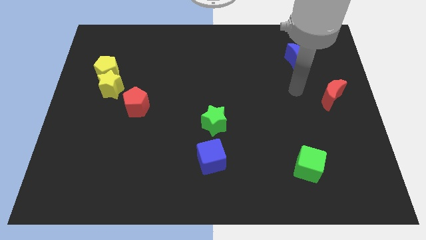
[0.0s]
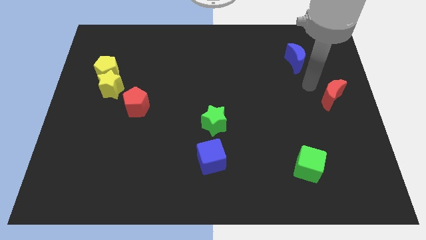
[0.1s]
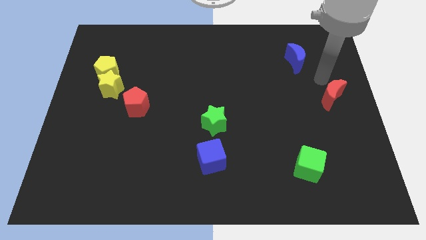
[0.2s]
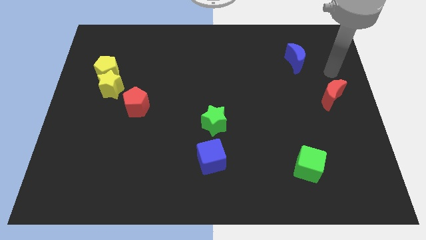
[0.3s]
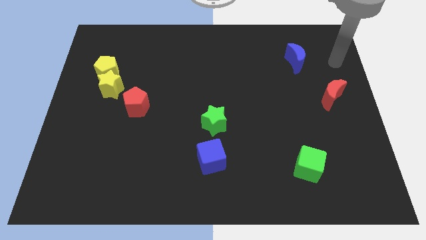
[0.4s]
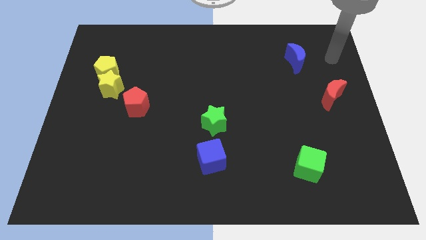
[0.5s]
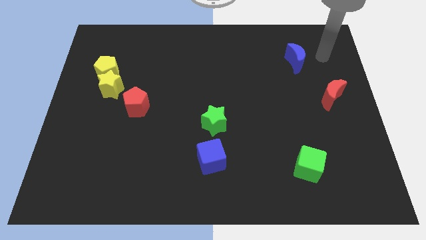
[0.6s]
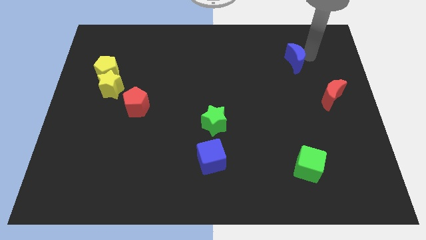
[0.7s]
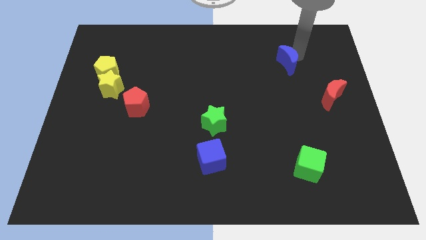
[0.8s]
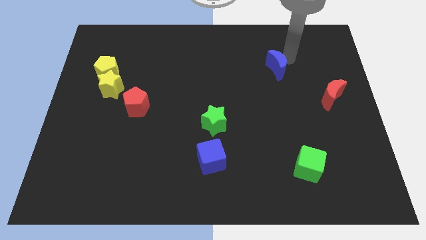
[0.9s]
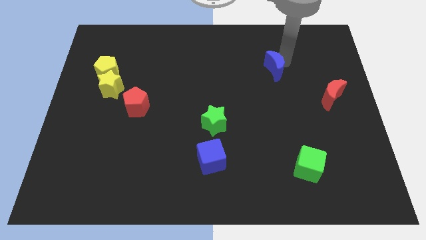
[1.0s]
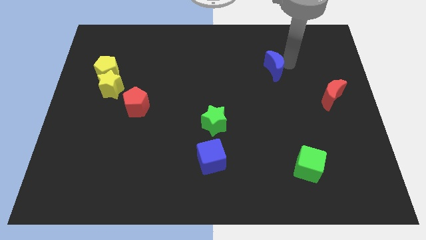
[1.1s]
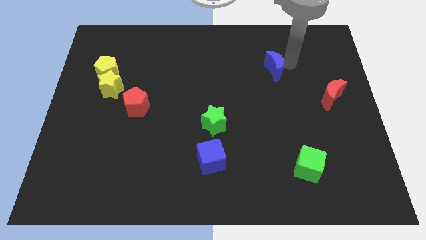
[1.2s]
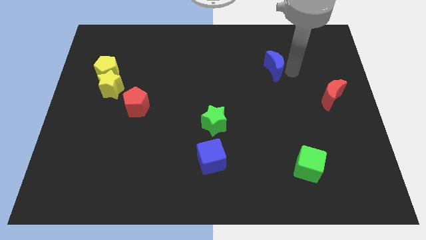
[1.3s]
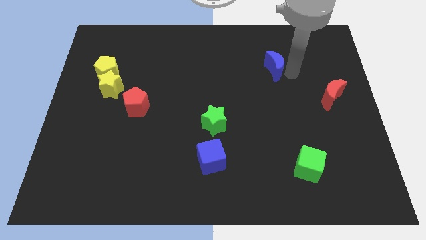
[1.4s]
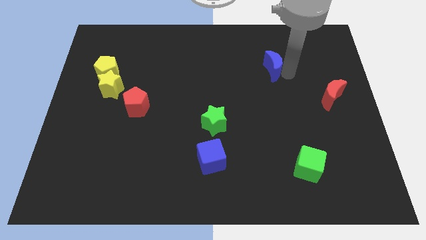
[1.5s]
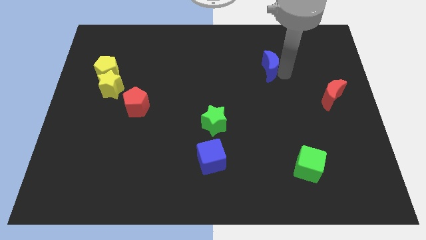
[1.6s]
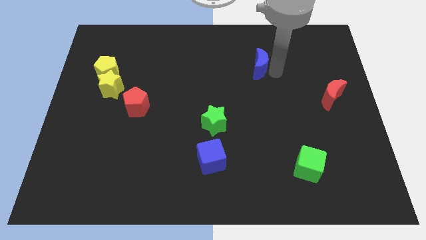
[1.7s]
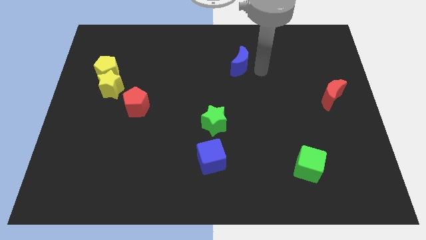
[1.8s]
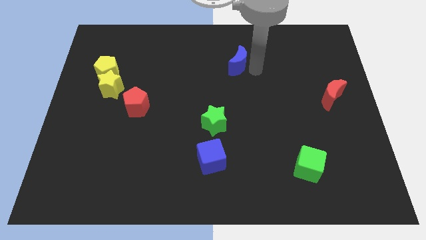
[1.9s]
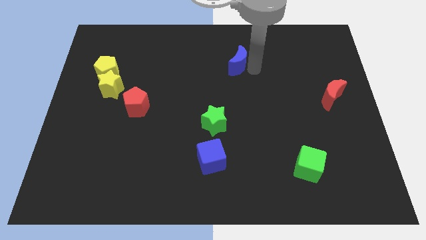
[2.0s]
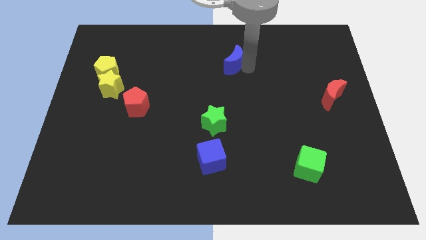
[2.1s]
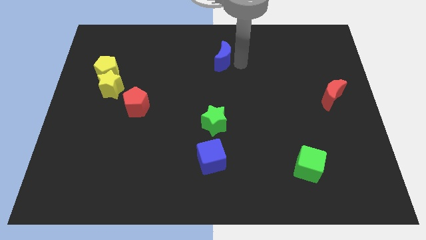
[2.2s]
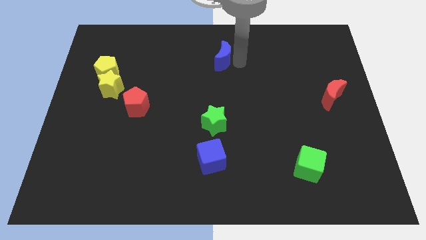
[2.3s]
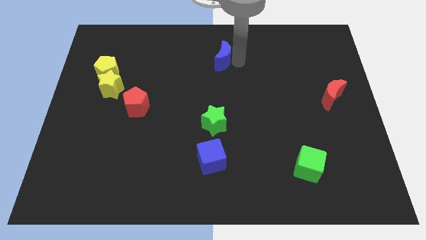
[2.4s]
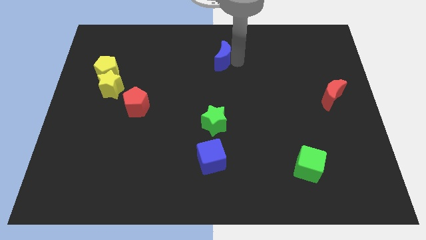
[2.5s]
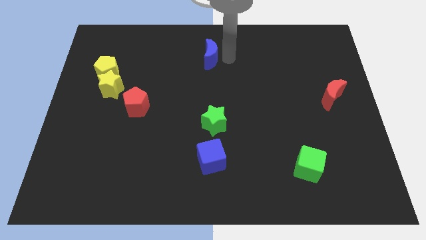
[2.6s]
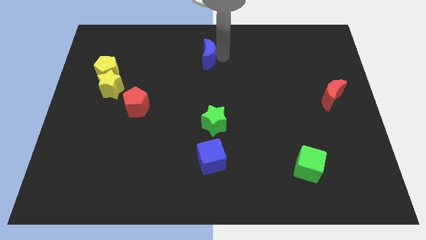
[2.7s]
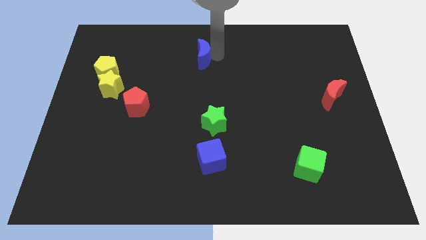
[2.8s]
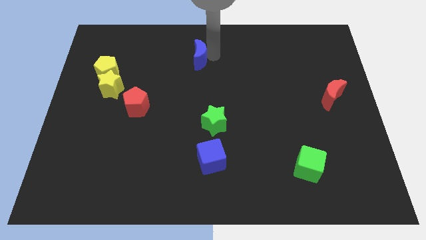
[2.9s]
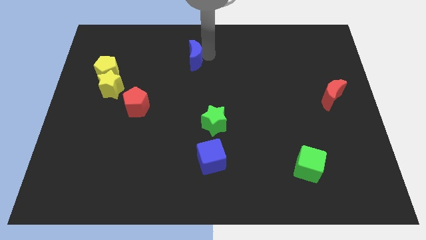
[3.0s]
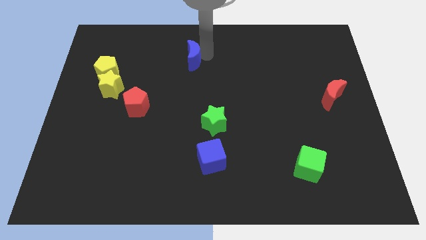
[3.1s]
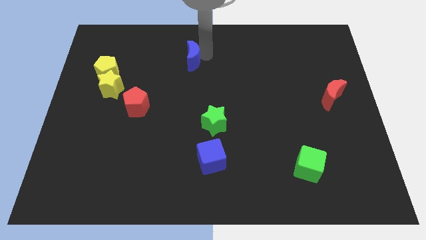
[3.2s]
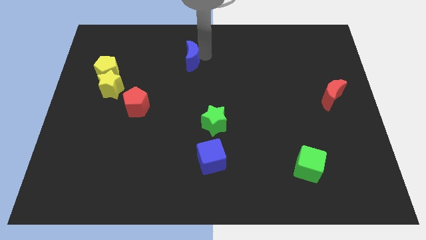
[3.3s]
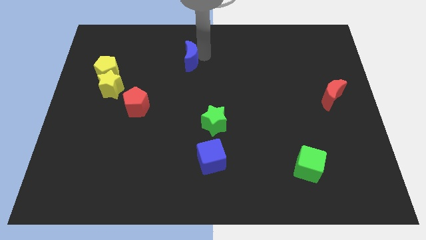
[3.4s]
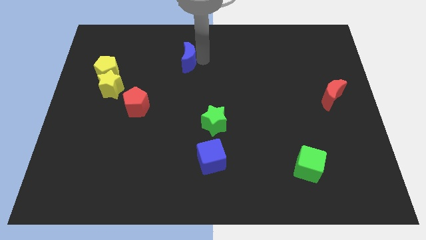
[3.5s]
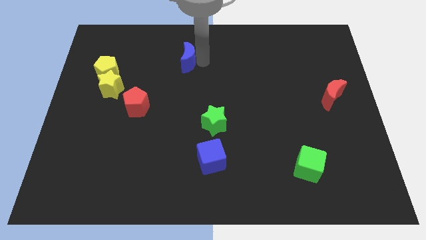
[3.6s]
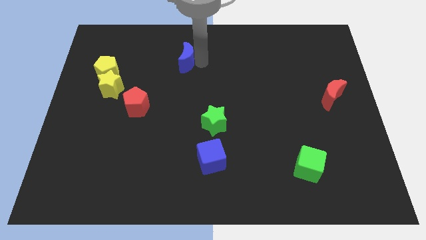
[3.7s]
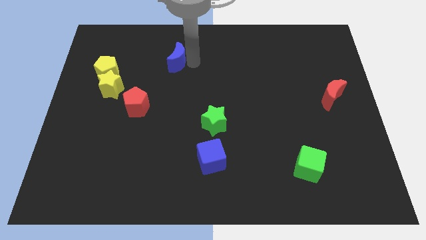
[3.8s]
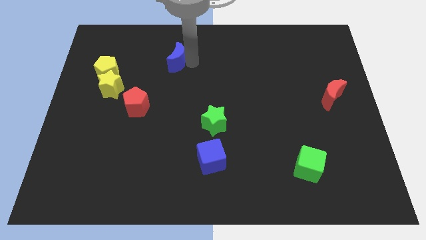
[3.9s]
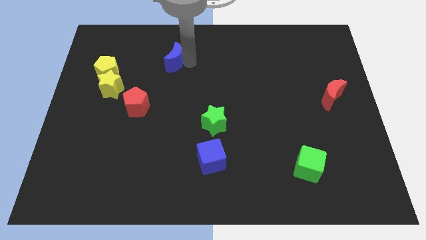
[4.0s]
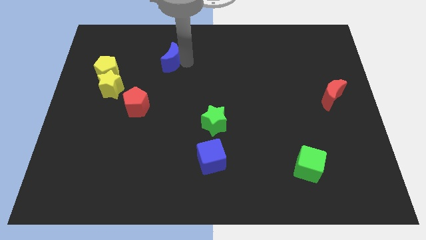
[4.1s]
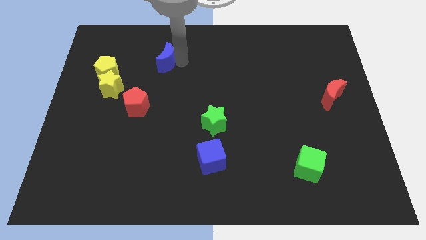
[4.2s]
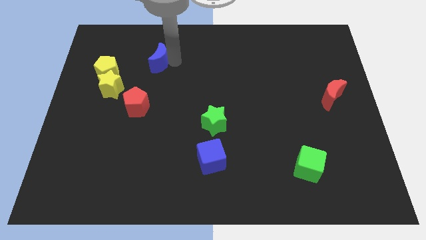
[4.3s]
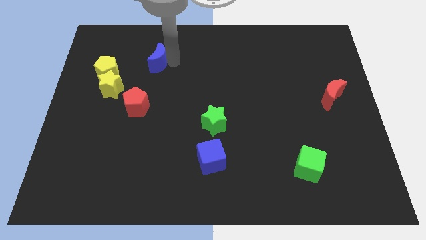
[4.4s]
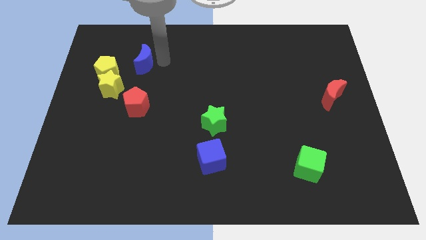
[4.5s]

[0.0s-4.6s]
place the blue moon vertically above the red pentagon

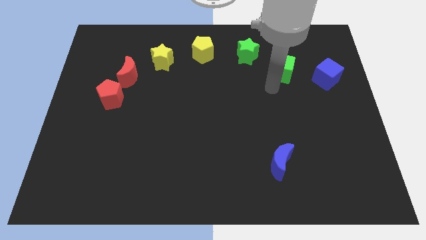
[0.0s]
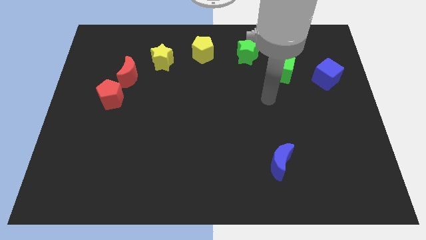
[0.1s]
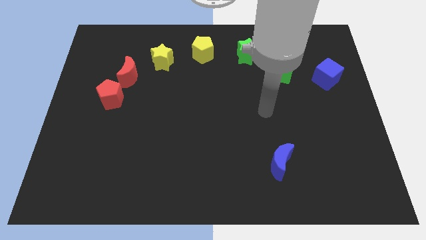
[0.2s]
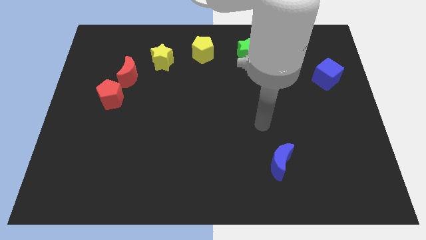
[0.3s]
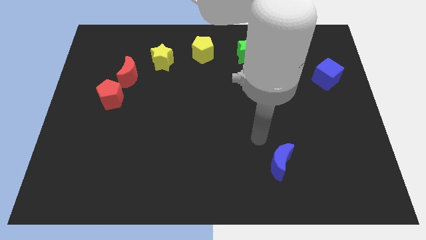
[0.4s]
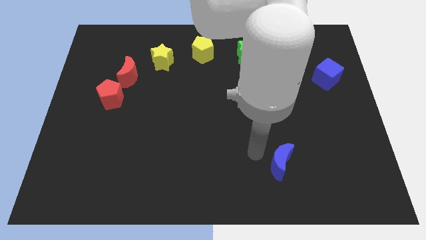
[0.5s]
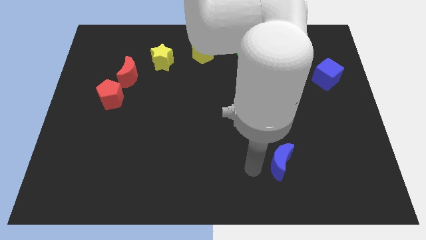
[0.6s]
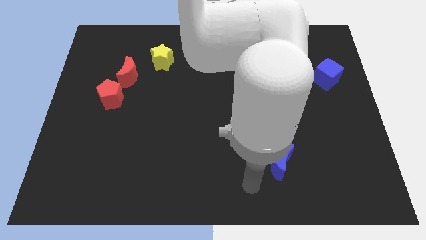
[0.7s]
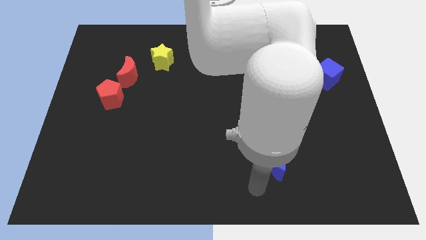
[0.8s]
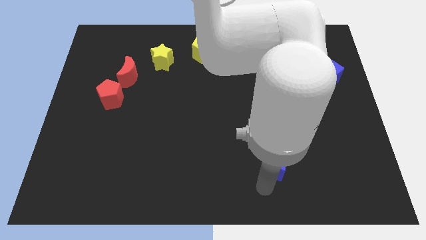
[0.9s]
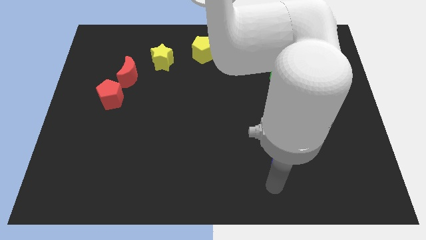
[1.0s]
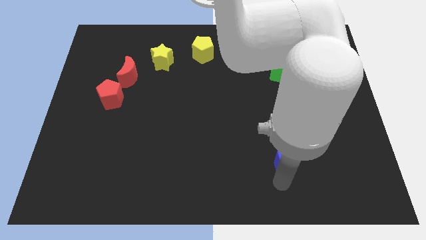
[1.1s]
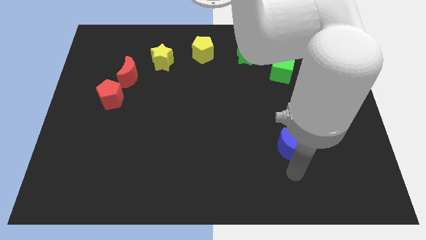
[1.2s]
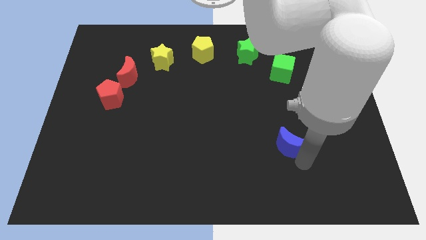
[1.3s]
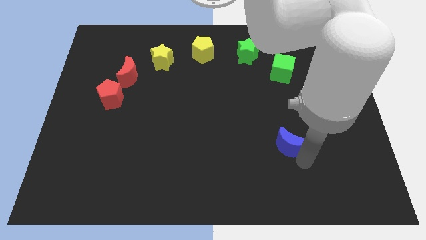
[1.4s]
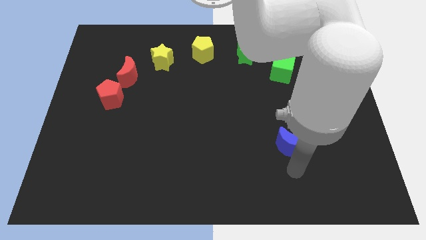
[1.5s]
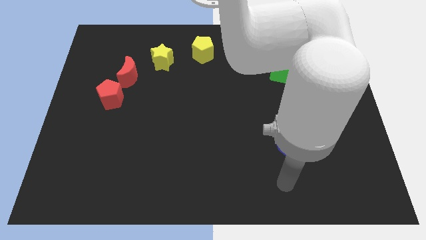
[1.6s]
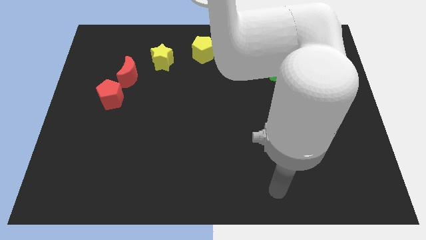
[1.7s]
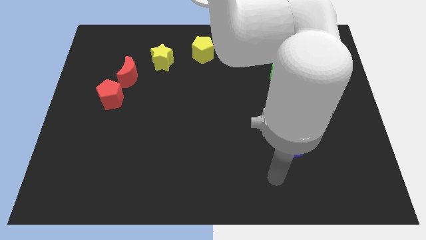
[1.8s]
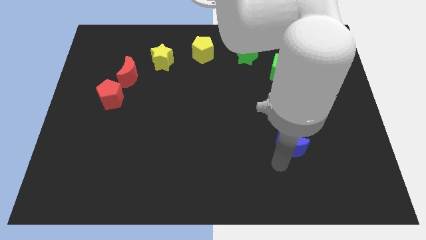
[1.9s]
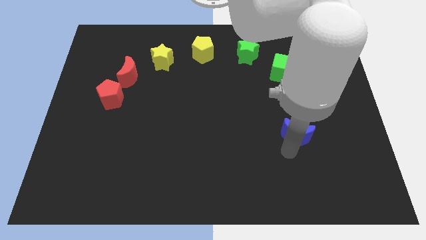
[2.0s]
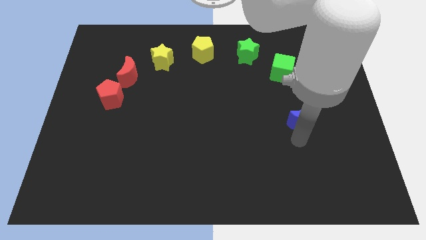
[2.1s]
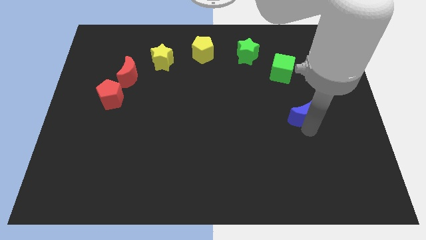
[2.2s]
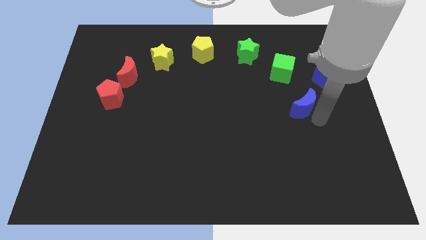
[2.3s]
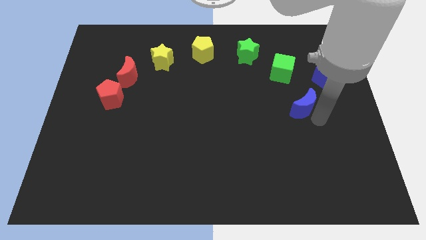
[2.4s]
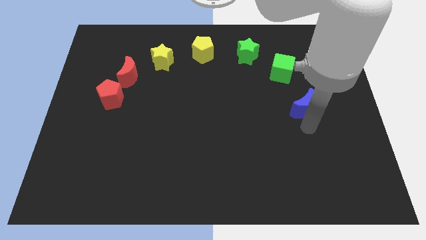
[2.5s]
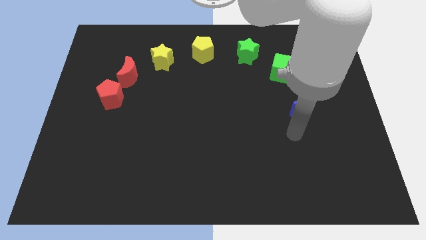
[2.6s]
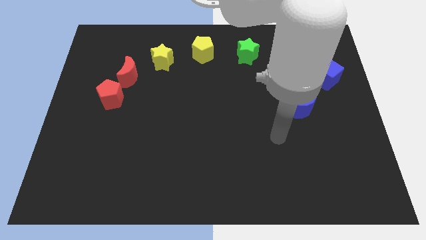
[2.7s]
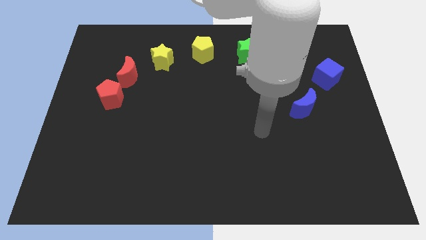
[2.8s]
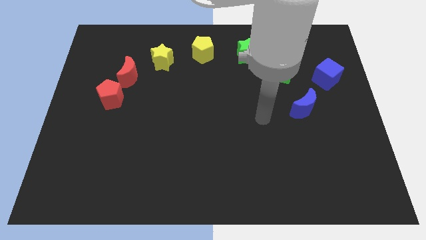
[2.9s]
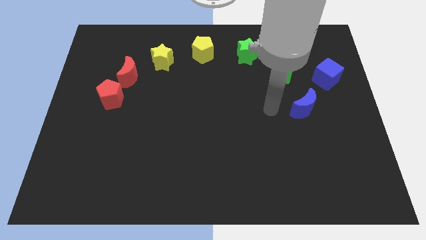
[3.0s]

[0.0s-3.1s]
slide red moon to the bottom left of blue cube

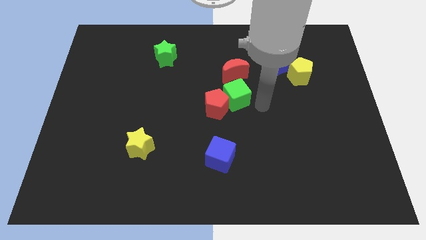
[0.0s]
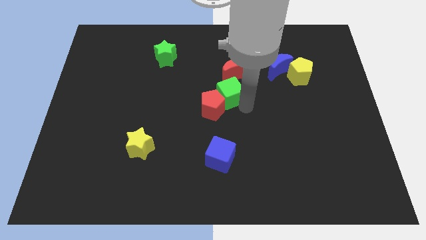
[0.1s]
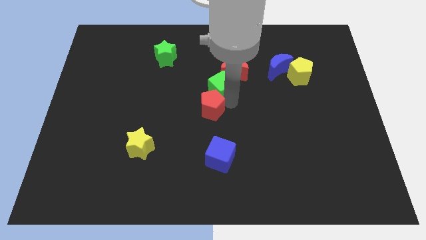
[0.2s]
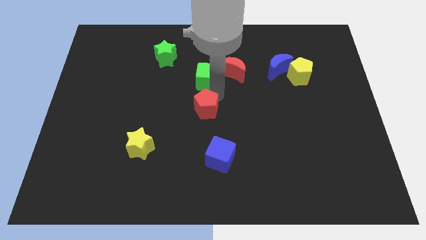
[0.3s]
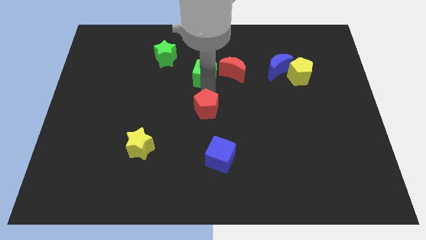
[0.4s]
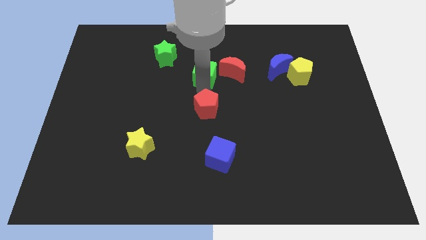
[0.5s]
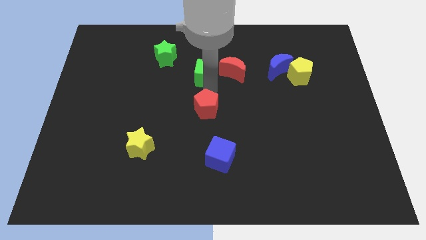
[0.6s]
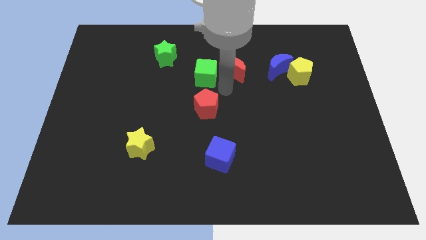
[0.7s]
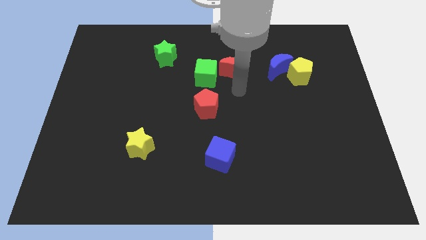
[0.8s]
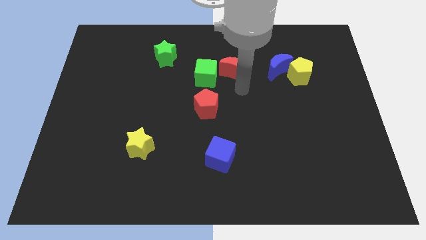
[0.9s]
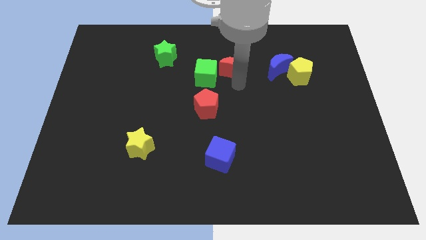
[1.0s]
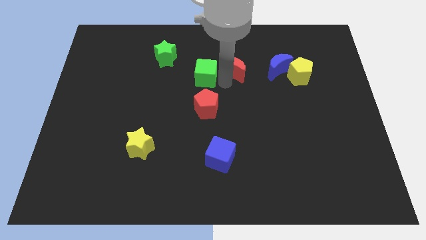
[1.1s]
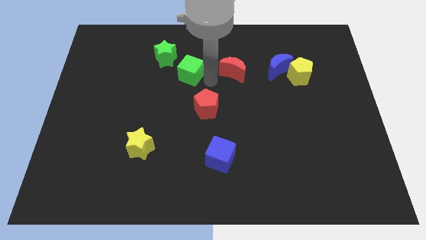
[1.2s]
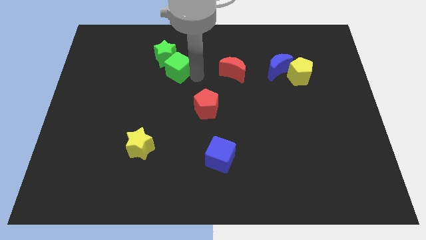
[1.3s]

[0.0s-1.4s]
put the green cube at the bottom right of the green star
